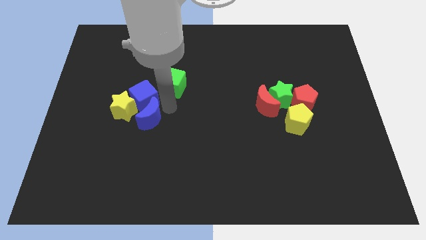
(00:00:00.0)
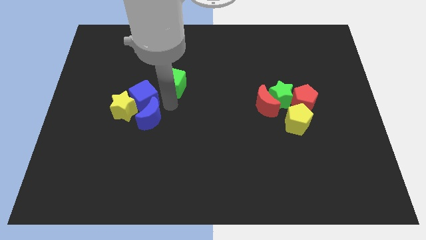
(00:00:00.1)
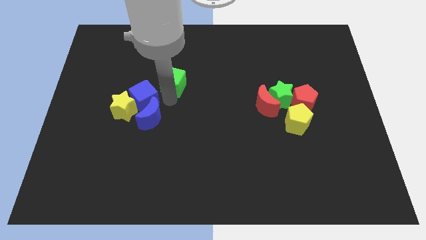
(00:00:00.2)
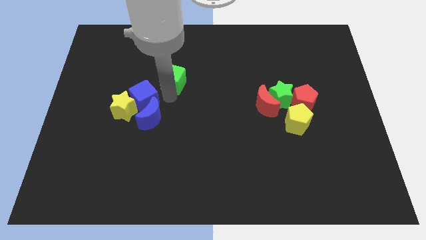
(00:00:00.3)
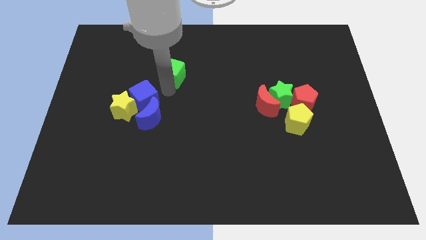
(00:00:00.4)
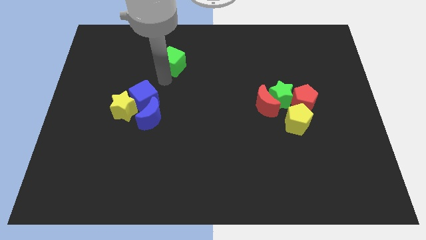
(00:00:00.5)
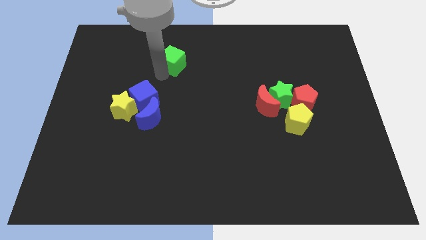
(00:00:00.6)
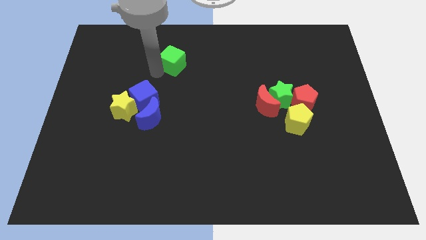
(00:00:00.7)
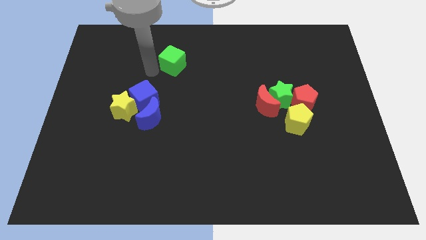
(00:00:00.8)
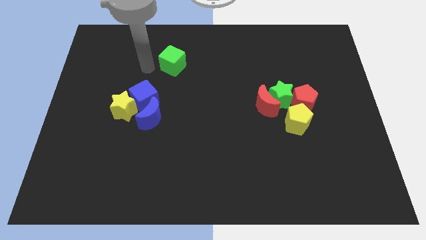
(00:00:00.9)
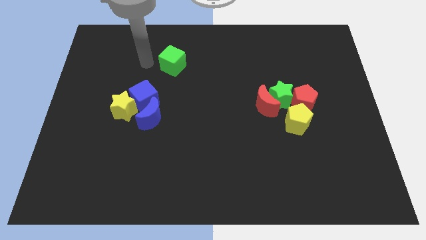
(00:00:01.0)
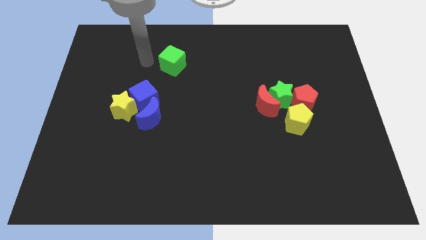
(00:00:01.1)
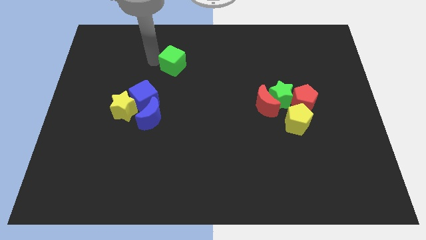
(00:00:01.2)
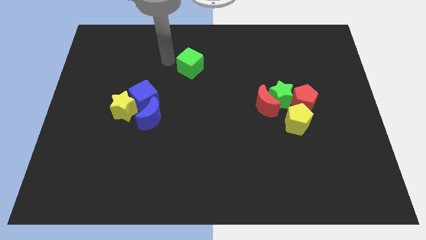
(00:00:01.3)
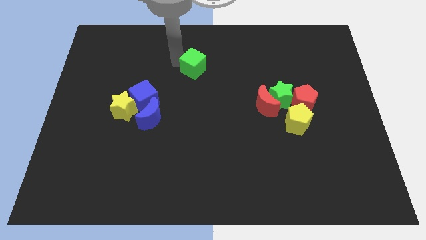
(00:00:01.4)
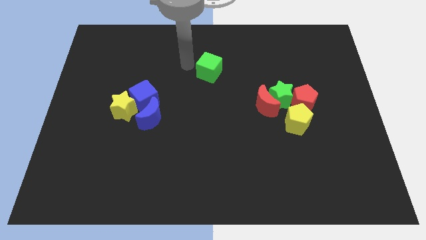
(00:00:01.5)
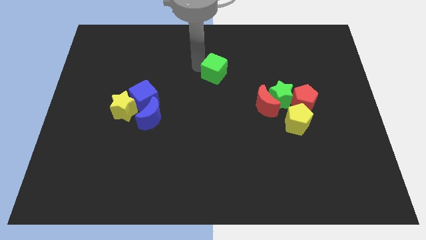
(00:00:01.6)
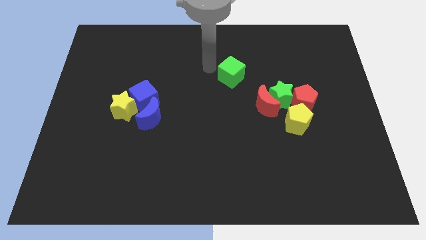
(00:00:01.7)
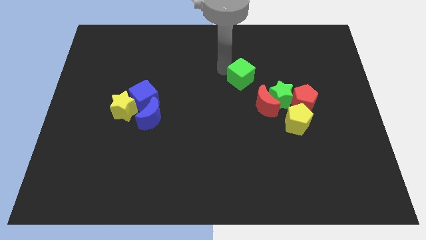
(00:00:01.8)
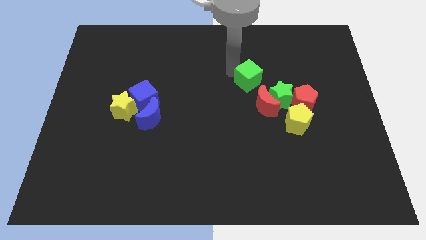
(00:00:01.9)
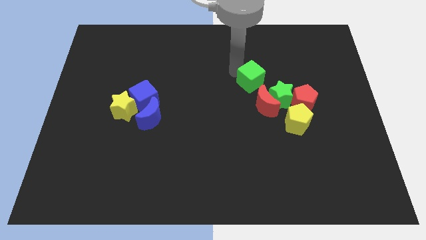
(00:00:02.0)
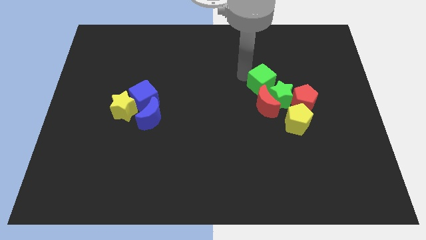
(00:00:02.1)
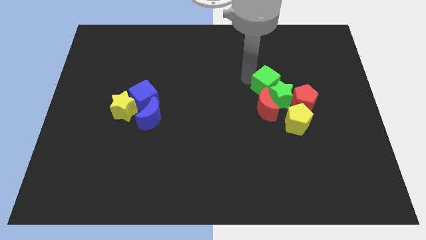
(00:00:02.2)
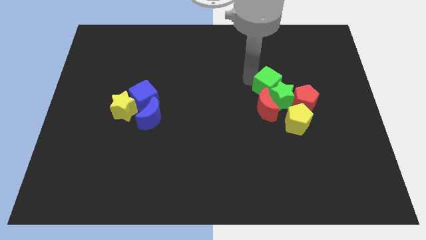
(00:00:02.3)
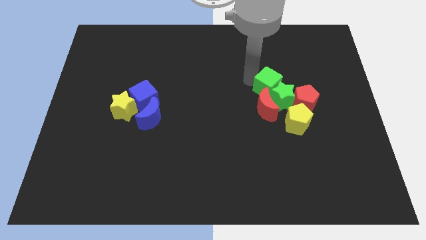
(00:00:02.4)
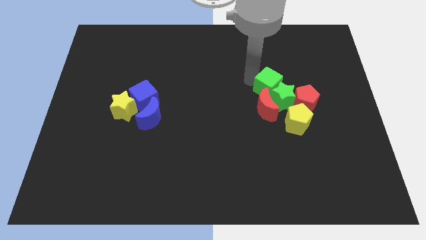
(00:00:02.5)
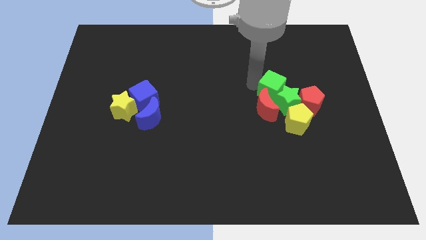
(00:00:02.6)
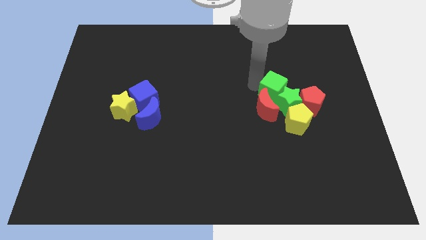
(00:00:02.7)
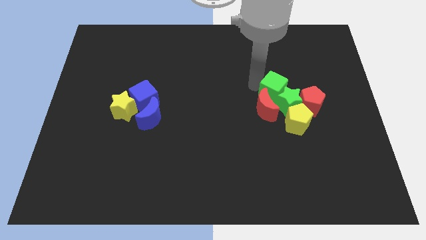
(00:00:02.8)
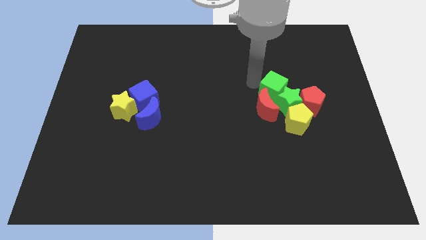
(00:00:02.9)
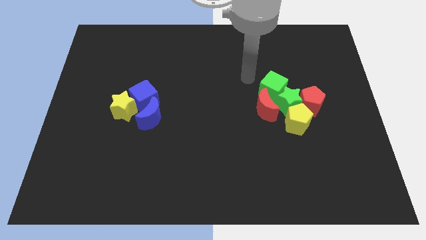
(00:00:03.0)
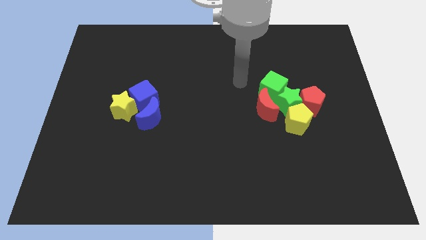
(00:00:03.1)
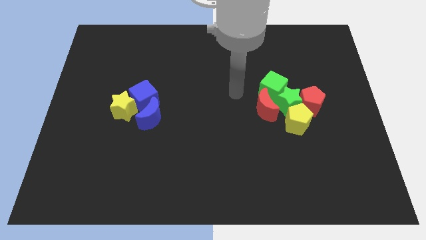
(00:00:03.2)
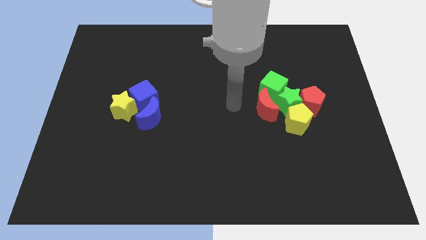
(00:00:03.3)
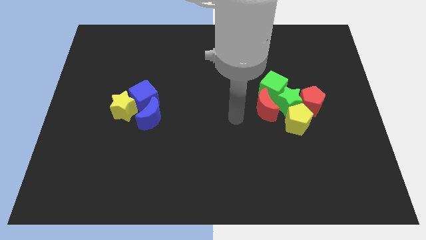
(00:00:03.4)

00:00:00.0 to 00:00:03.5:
push the green cube into the green star

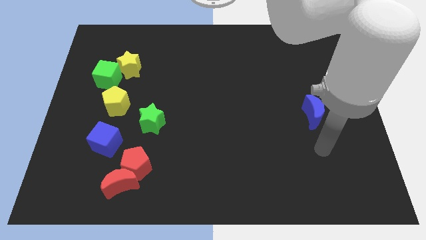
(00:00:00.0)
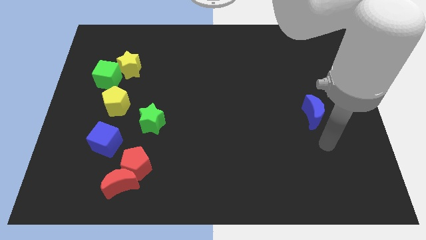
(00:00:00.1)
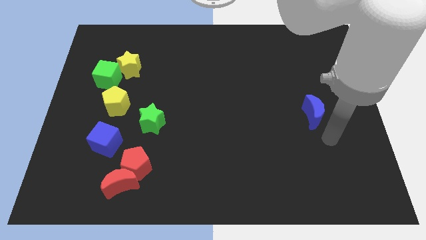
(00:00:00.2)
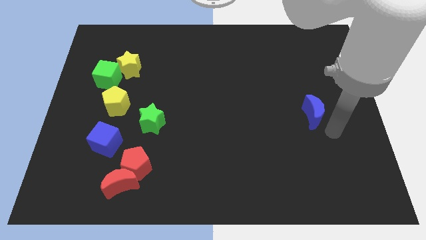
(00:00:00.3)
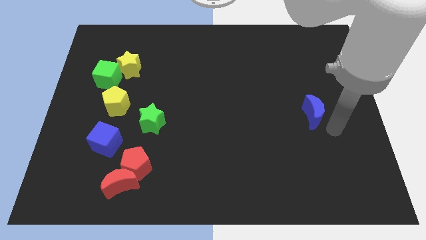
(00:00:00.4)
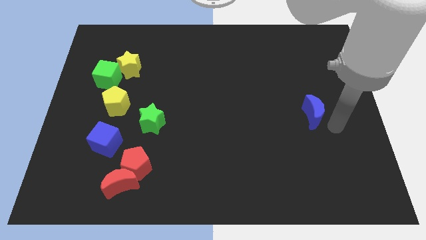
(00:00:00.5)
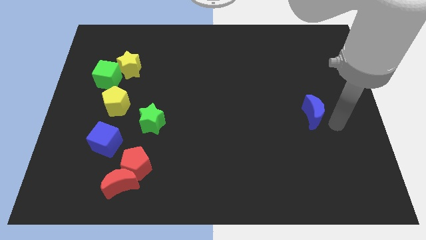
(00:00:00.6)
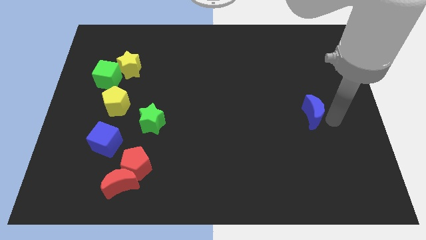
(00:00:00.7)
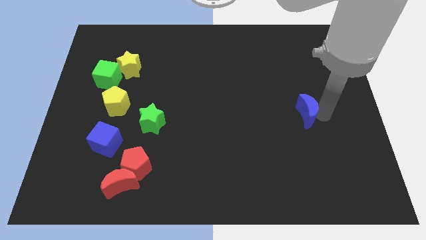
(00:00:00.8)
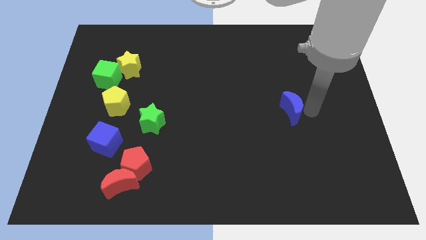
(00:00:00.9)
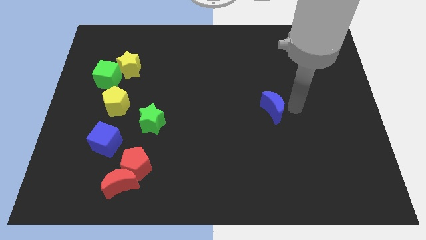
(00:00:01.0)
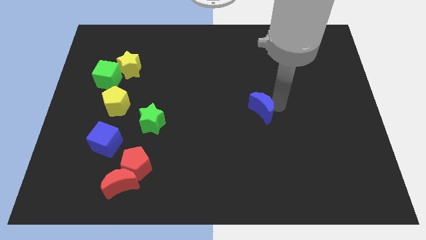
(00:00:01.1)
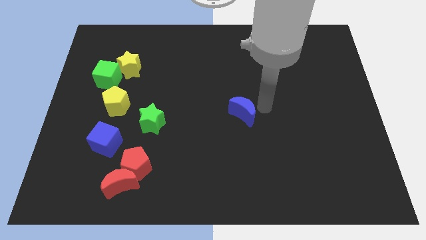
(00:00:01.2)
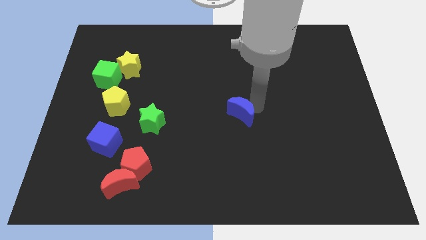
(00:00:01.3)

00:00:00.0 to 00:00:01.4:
slide the blue moon to the center

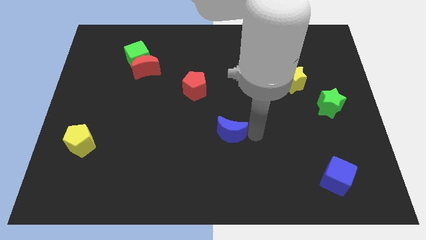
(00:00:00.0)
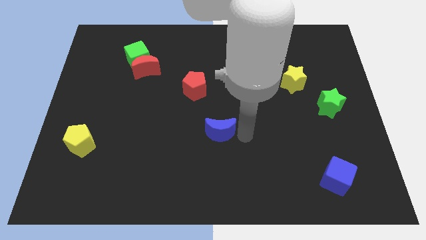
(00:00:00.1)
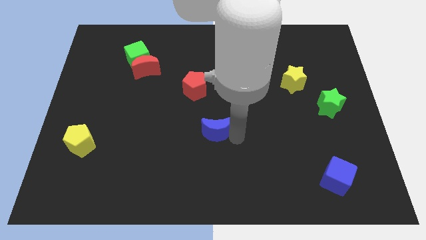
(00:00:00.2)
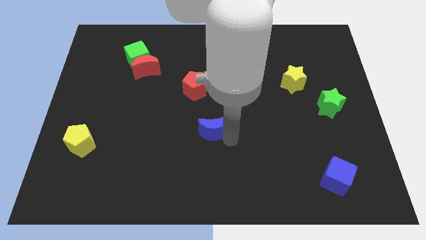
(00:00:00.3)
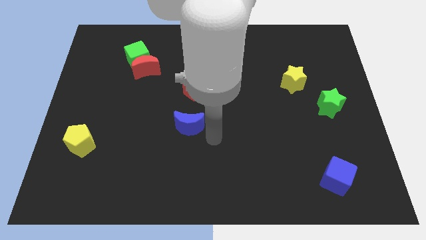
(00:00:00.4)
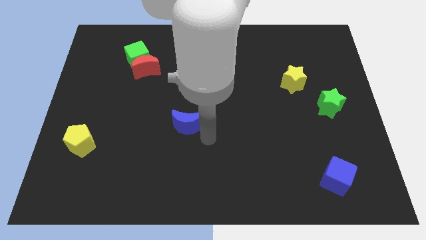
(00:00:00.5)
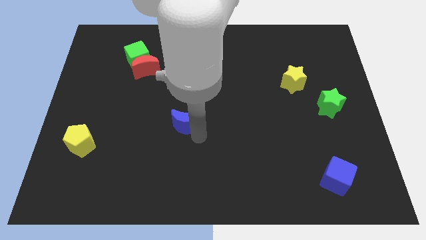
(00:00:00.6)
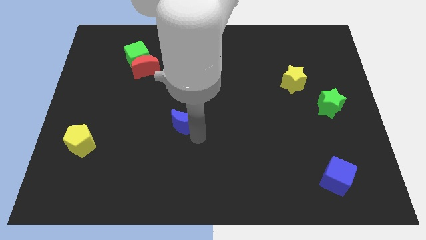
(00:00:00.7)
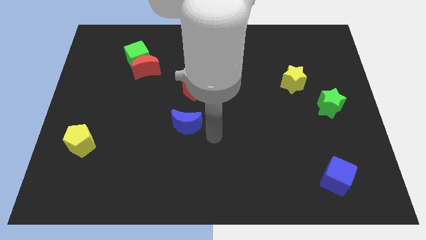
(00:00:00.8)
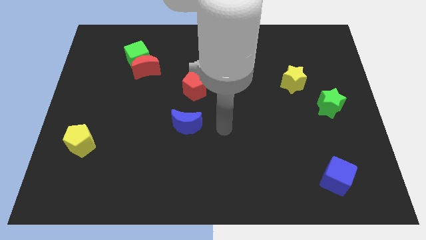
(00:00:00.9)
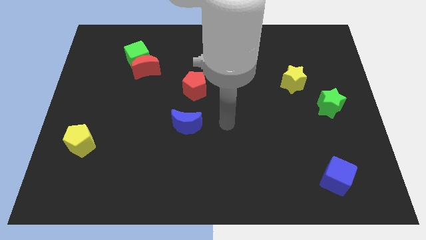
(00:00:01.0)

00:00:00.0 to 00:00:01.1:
move blue moon slightly left

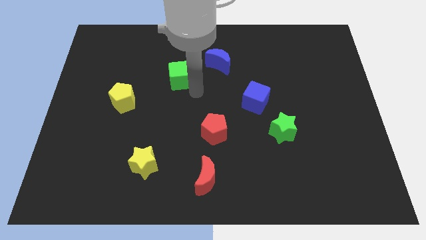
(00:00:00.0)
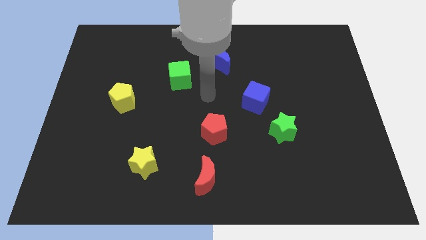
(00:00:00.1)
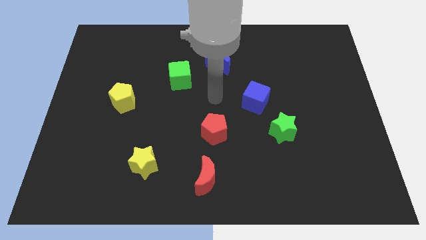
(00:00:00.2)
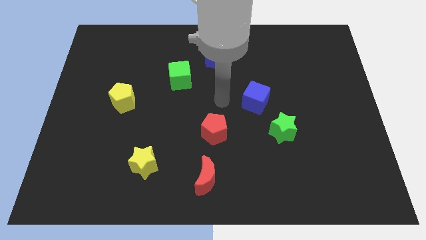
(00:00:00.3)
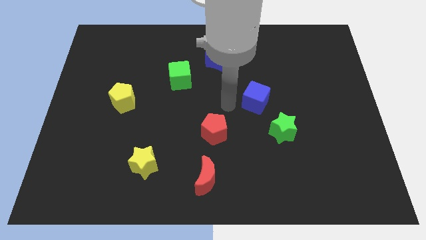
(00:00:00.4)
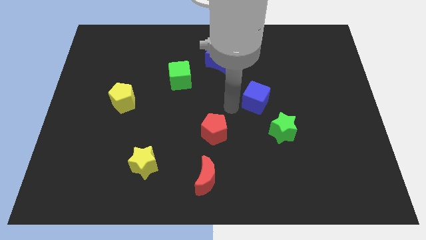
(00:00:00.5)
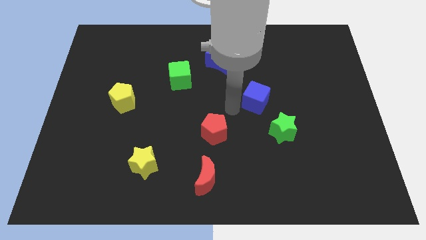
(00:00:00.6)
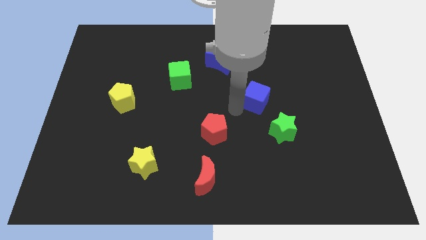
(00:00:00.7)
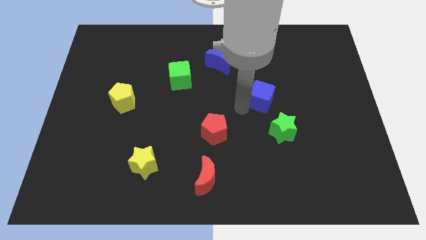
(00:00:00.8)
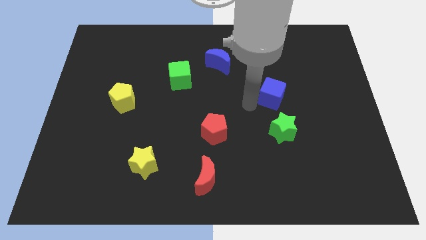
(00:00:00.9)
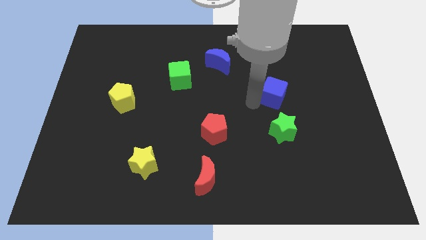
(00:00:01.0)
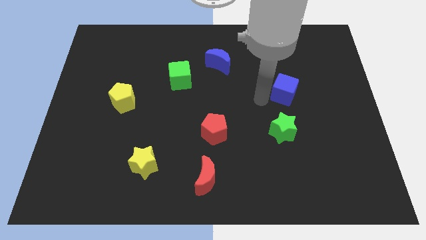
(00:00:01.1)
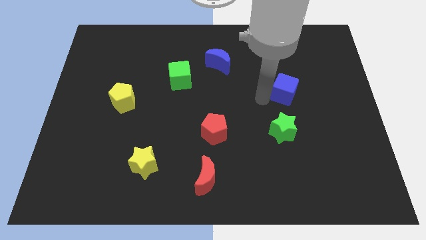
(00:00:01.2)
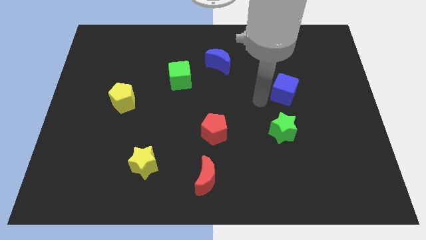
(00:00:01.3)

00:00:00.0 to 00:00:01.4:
place the blue cube above the green star

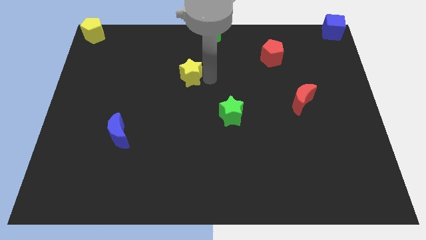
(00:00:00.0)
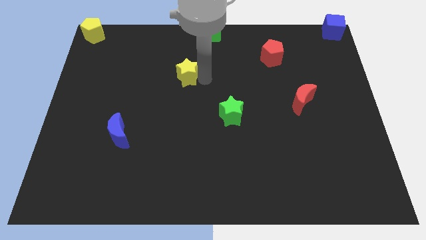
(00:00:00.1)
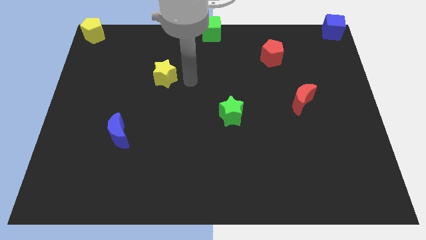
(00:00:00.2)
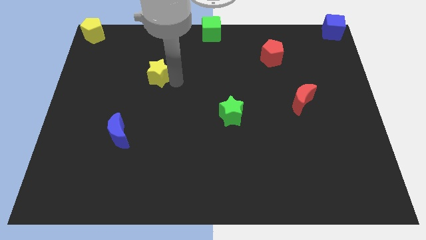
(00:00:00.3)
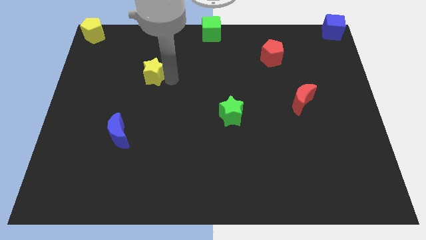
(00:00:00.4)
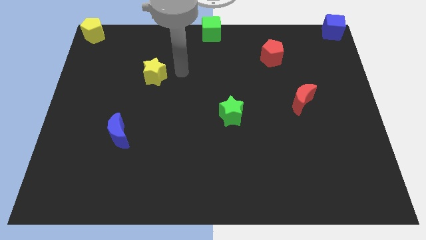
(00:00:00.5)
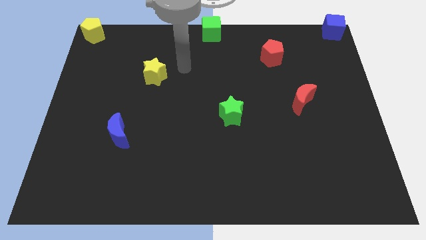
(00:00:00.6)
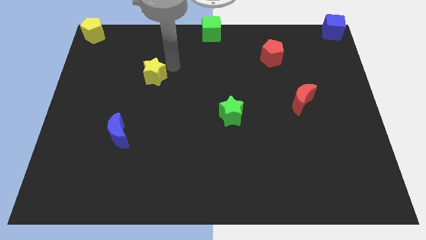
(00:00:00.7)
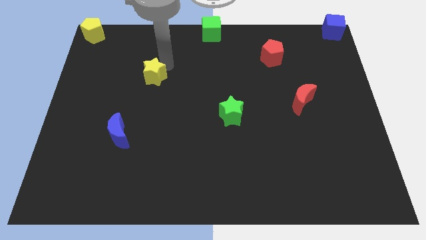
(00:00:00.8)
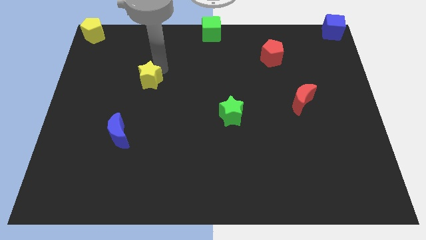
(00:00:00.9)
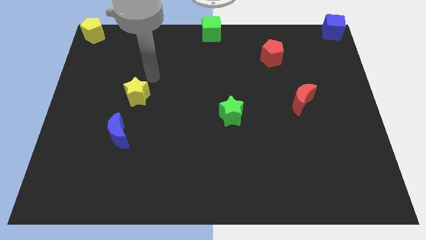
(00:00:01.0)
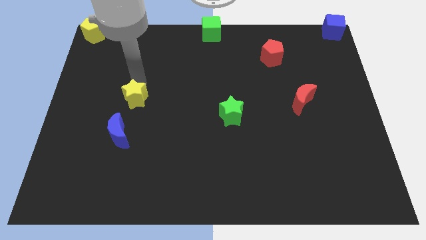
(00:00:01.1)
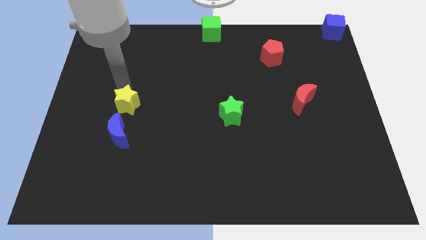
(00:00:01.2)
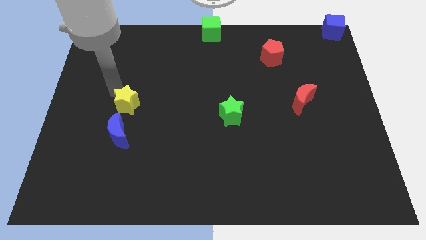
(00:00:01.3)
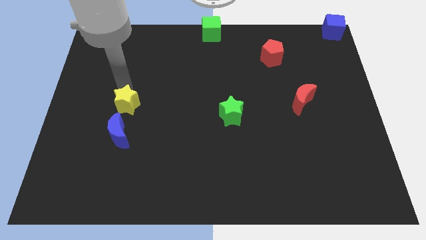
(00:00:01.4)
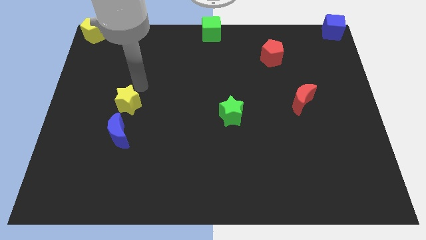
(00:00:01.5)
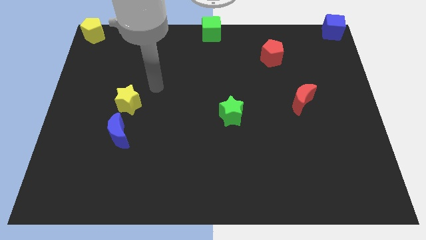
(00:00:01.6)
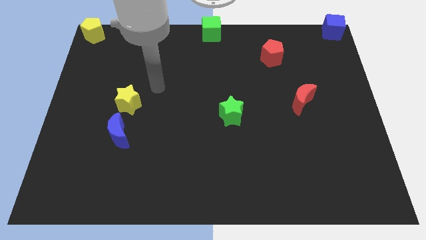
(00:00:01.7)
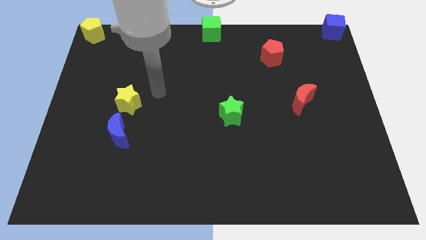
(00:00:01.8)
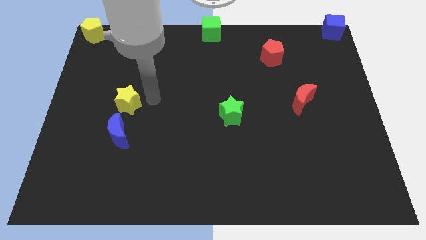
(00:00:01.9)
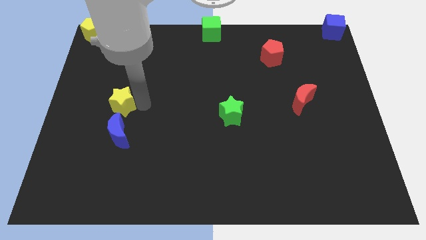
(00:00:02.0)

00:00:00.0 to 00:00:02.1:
place yellow star on top of blue cube
